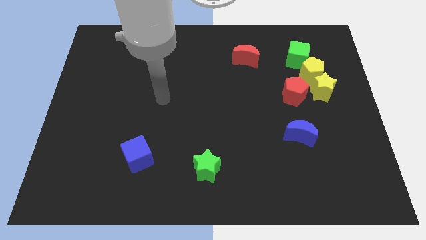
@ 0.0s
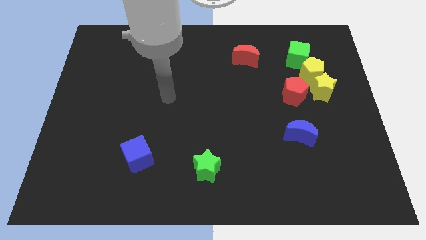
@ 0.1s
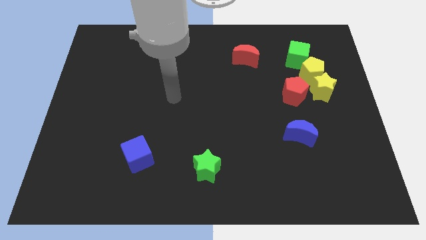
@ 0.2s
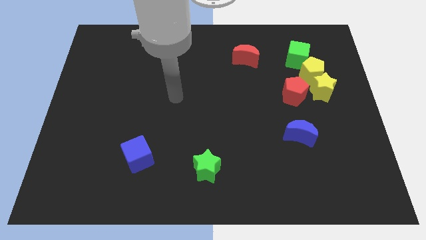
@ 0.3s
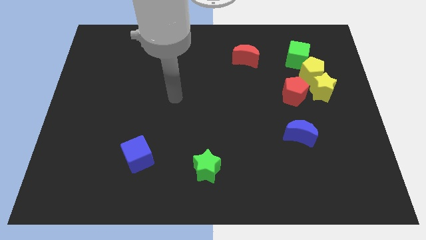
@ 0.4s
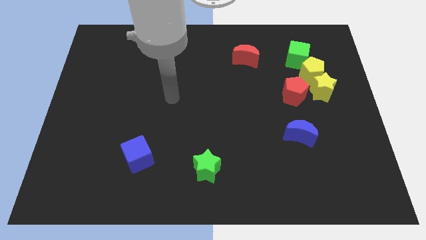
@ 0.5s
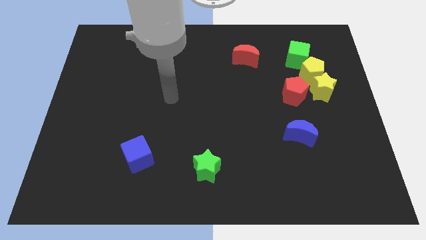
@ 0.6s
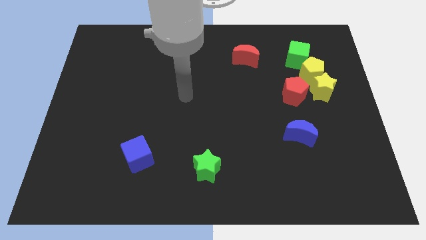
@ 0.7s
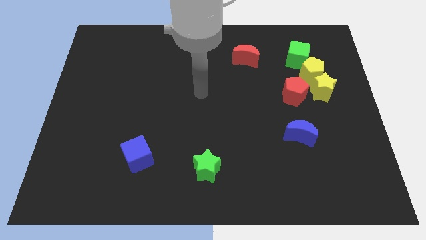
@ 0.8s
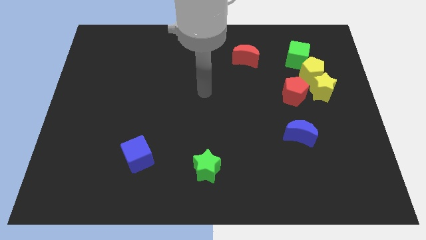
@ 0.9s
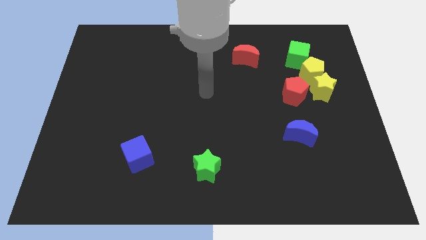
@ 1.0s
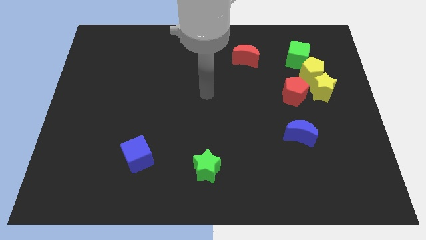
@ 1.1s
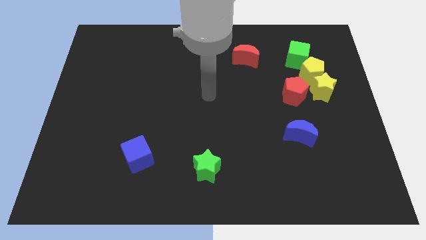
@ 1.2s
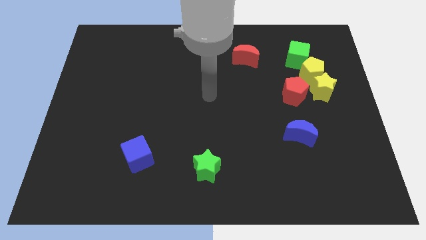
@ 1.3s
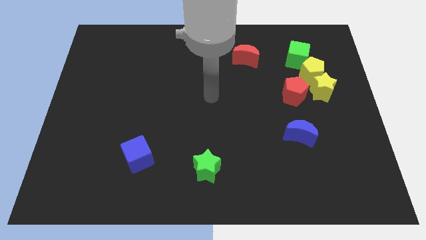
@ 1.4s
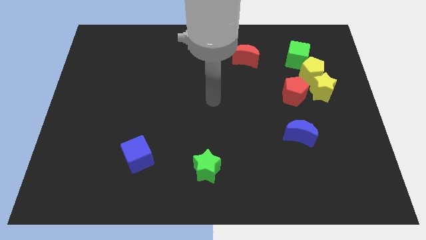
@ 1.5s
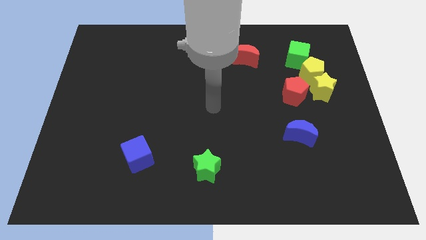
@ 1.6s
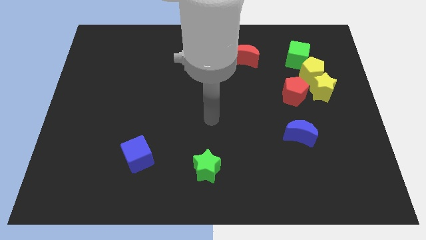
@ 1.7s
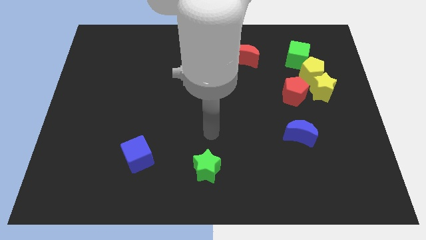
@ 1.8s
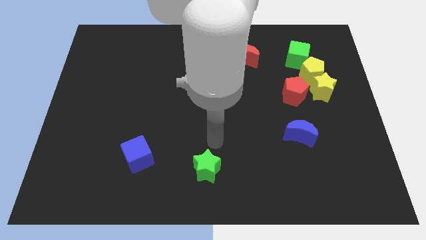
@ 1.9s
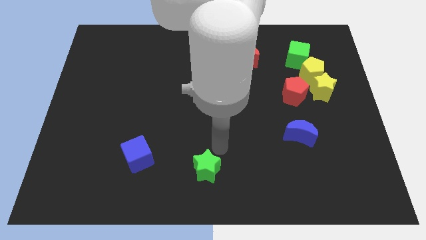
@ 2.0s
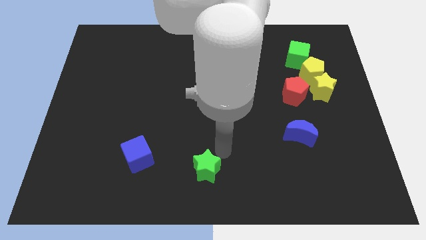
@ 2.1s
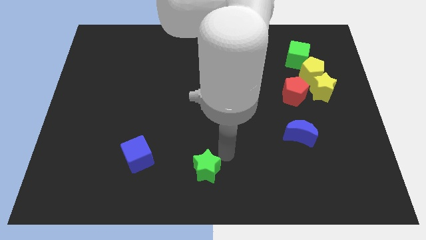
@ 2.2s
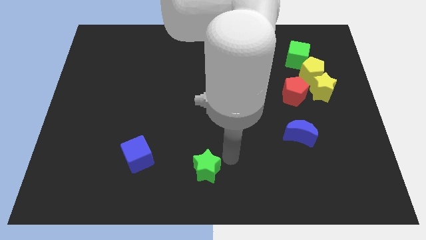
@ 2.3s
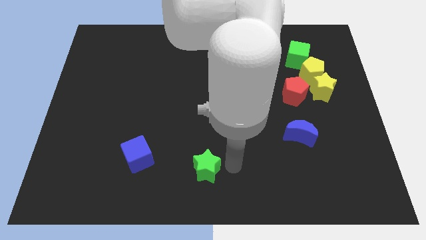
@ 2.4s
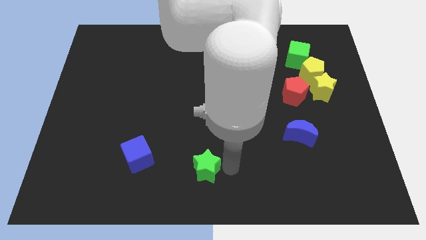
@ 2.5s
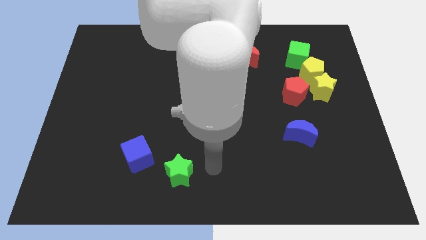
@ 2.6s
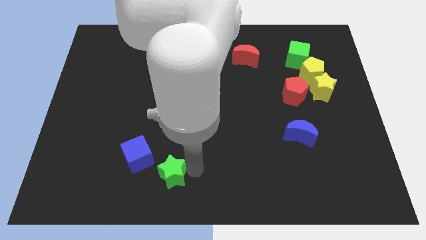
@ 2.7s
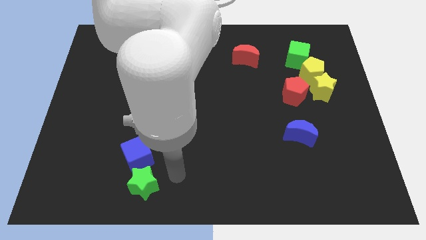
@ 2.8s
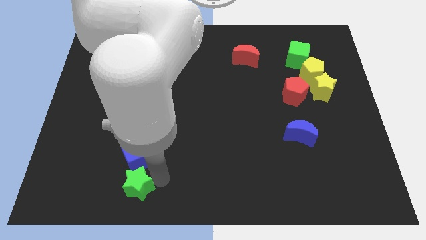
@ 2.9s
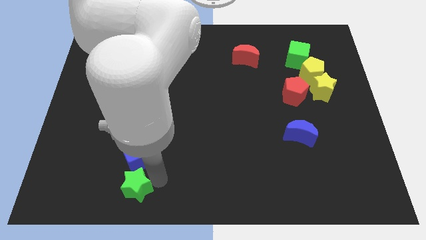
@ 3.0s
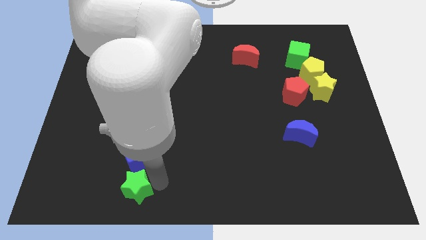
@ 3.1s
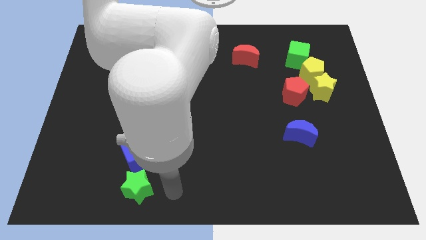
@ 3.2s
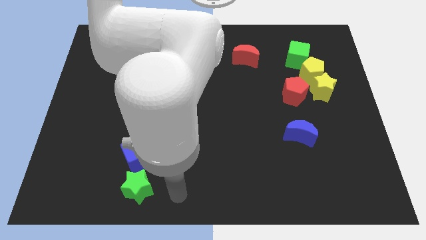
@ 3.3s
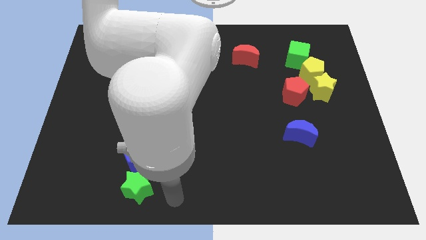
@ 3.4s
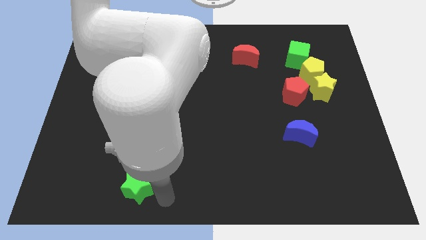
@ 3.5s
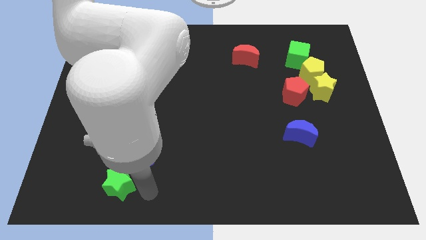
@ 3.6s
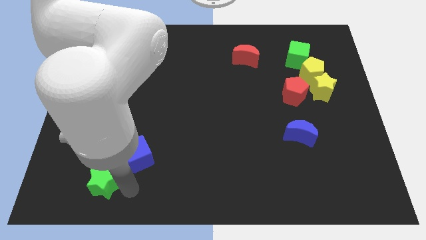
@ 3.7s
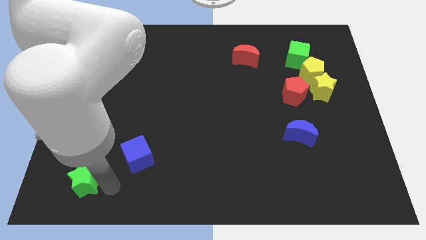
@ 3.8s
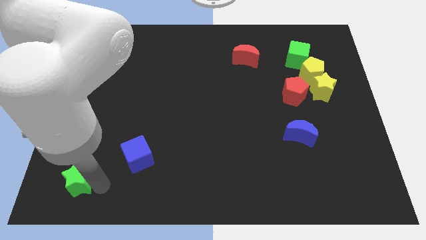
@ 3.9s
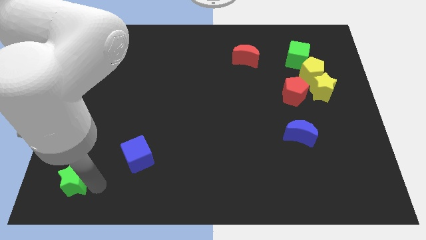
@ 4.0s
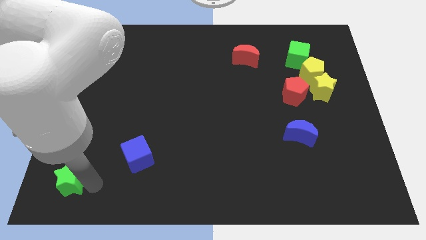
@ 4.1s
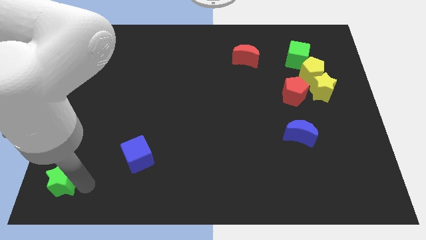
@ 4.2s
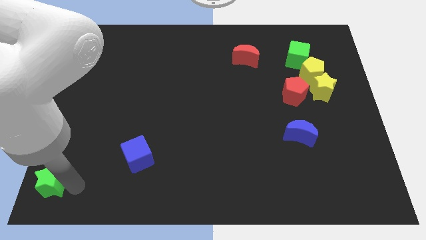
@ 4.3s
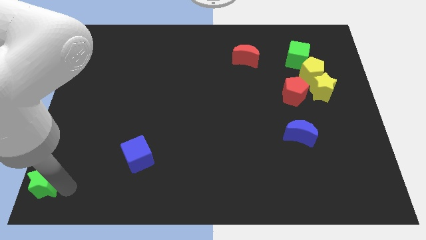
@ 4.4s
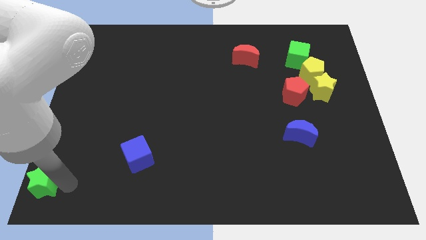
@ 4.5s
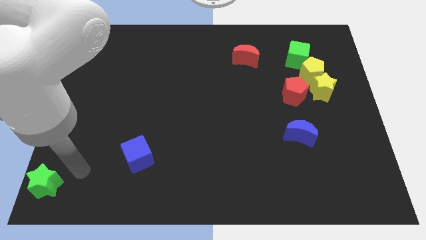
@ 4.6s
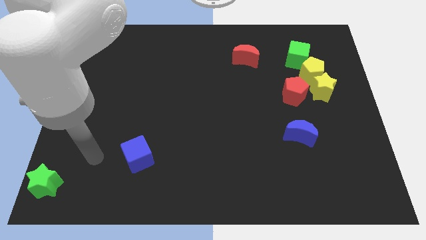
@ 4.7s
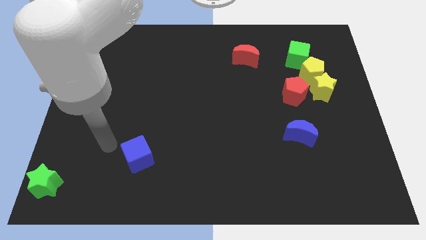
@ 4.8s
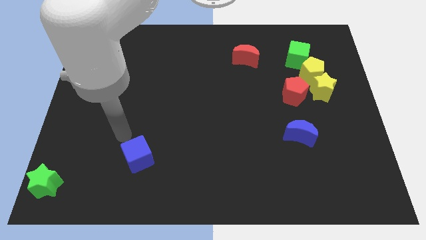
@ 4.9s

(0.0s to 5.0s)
push the green star to the bottom left of the board

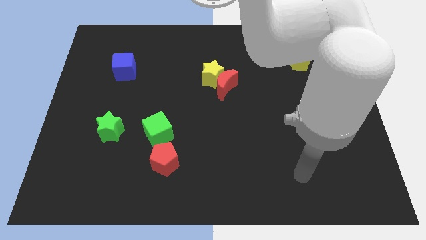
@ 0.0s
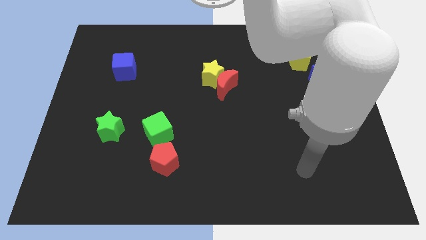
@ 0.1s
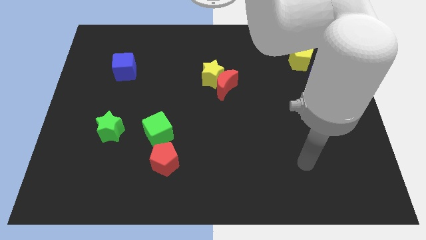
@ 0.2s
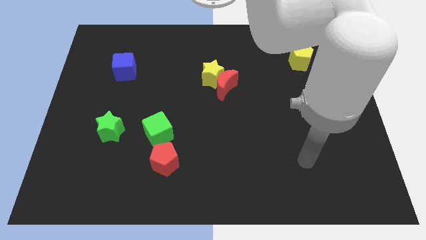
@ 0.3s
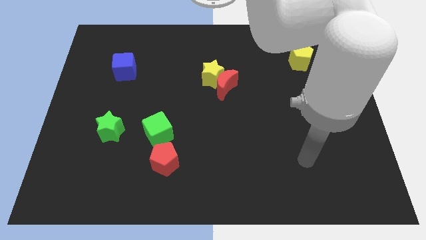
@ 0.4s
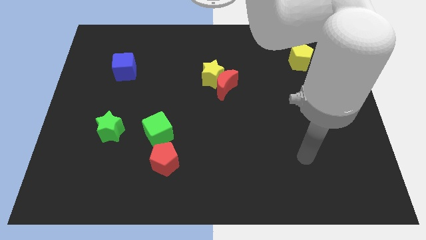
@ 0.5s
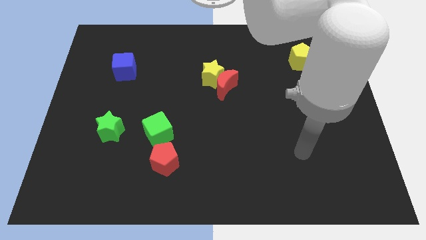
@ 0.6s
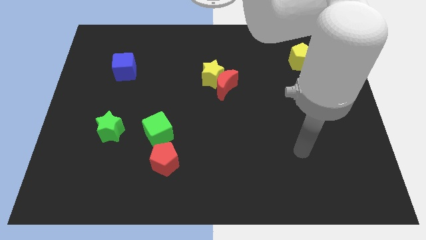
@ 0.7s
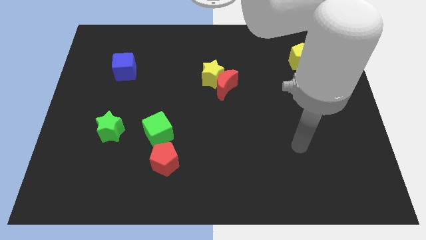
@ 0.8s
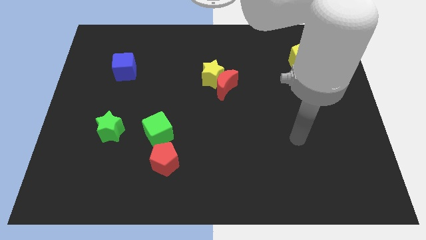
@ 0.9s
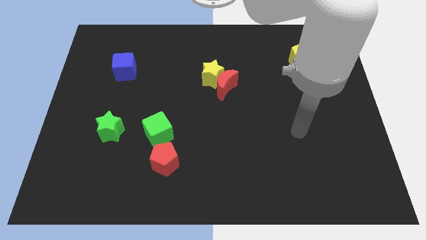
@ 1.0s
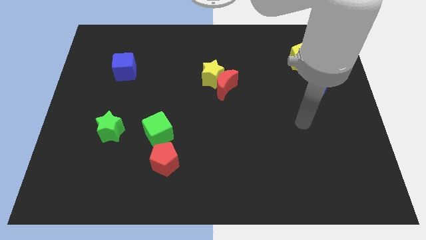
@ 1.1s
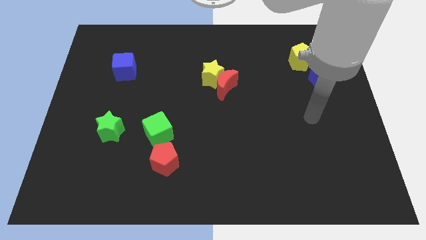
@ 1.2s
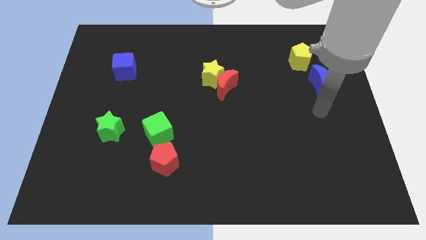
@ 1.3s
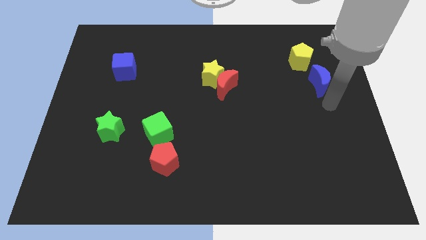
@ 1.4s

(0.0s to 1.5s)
move your arm to the bottom of the blue crescent

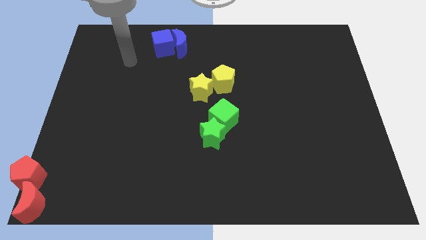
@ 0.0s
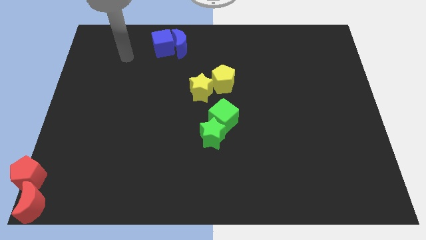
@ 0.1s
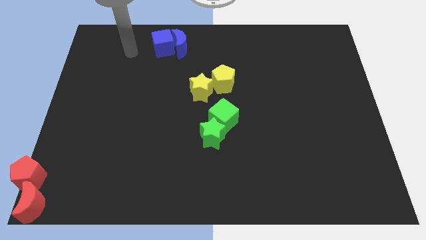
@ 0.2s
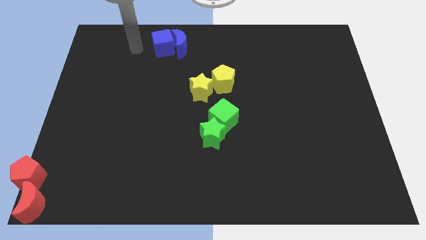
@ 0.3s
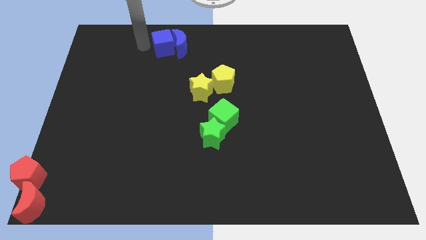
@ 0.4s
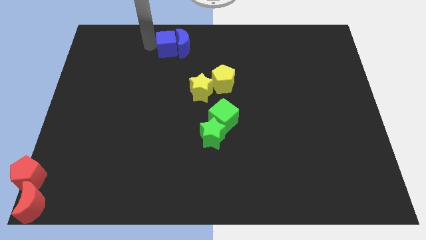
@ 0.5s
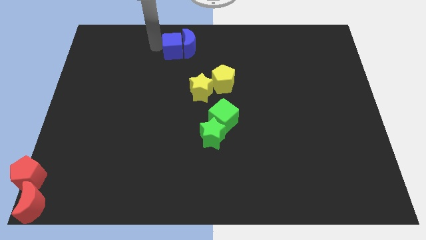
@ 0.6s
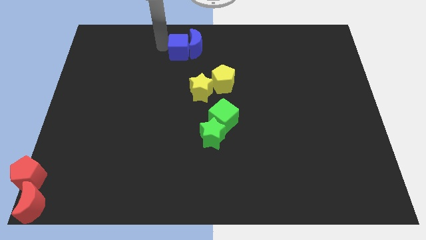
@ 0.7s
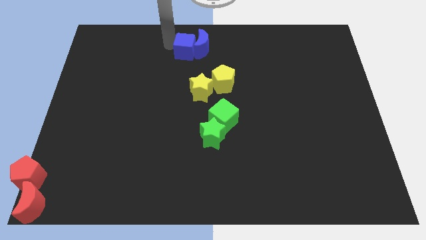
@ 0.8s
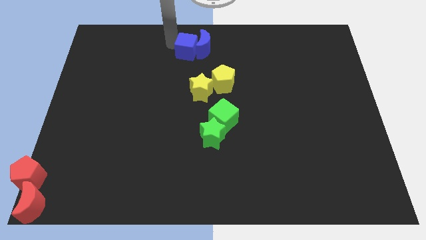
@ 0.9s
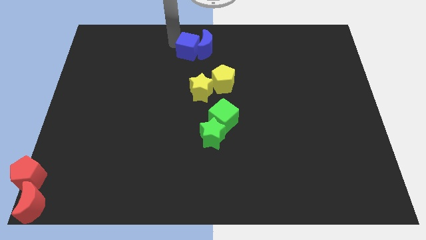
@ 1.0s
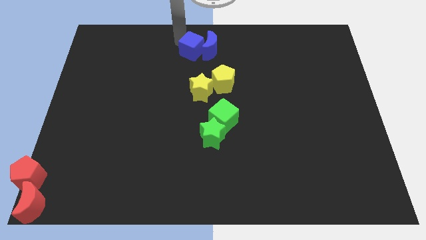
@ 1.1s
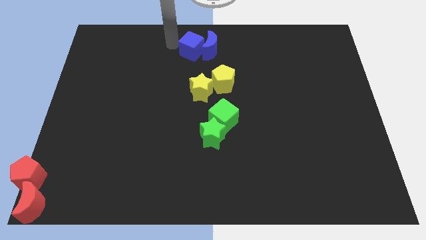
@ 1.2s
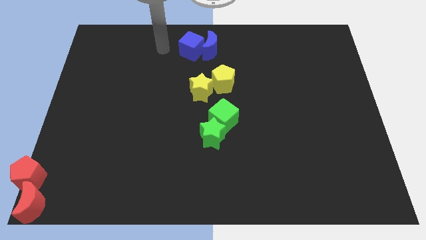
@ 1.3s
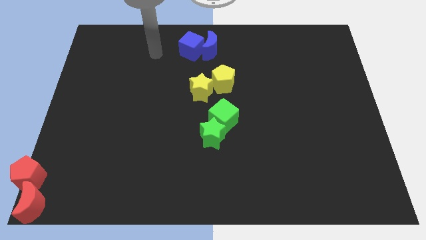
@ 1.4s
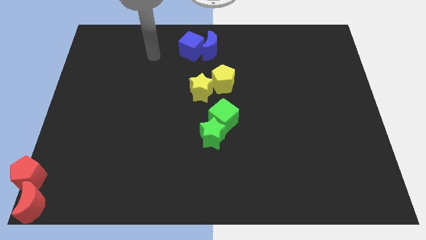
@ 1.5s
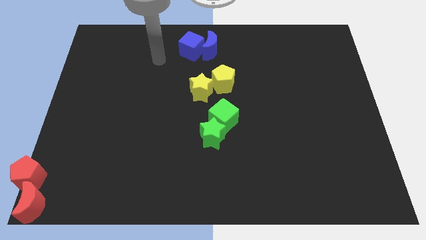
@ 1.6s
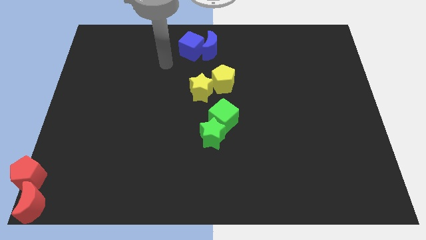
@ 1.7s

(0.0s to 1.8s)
slide the blue blocks to the right side of the board

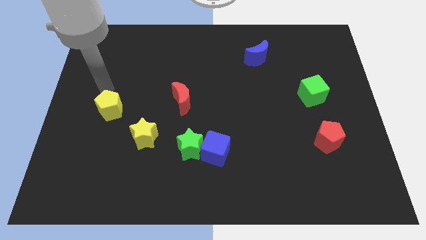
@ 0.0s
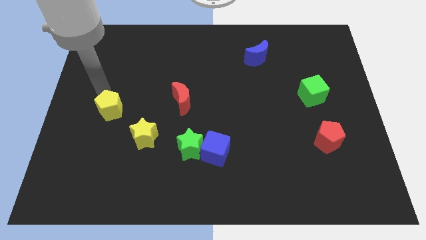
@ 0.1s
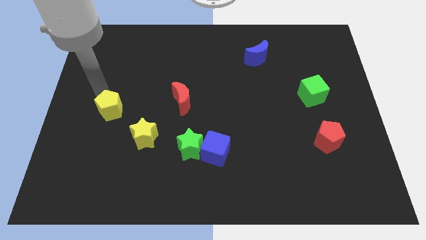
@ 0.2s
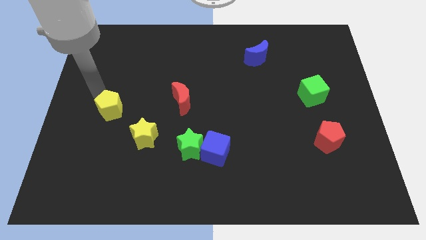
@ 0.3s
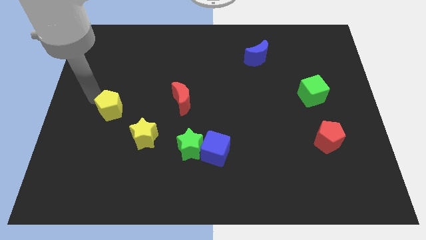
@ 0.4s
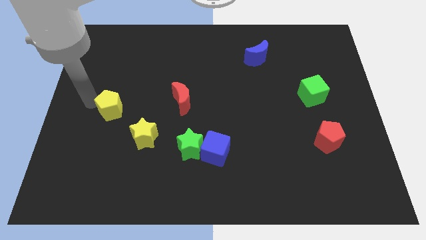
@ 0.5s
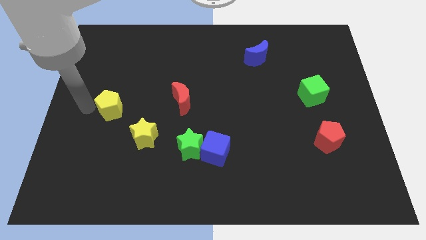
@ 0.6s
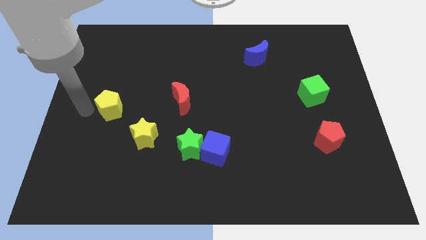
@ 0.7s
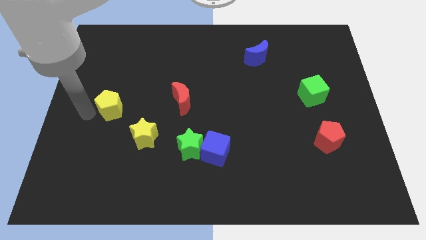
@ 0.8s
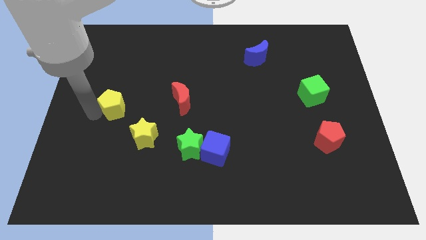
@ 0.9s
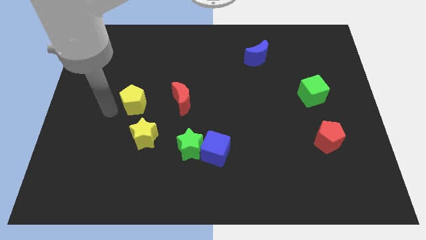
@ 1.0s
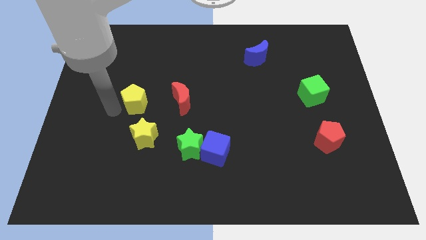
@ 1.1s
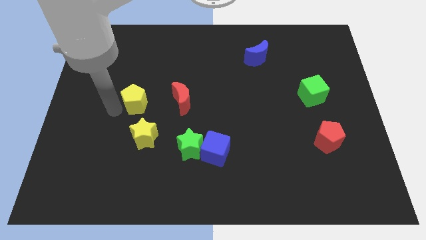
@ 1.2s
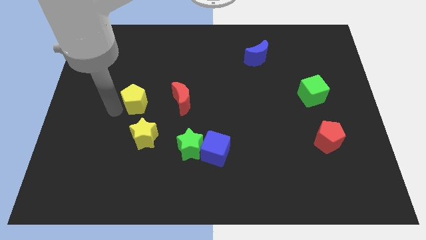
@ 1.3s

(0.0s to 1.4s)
move the yellow pentagon above the yellow star
